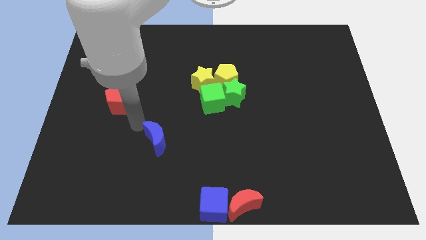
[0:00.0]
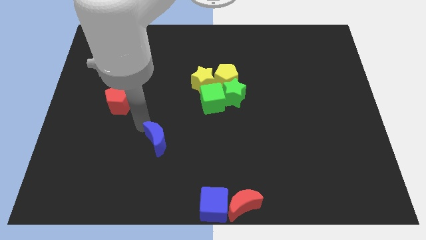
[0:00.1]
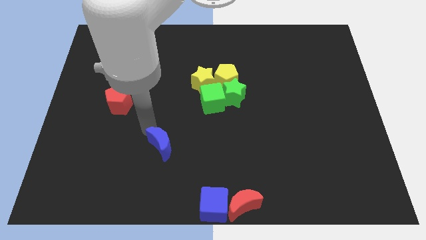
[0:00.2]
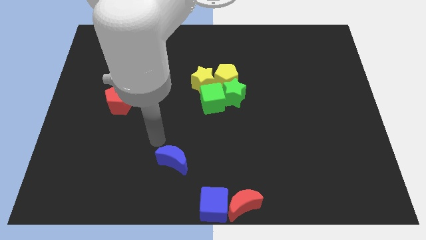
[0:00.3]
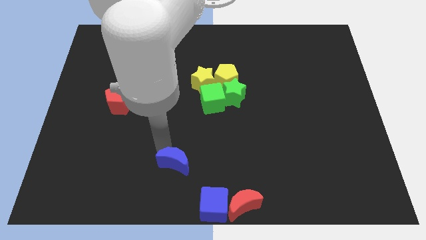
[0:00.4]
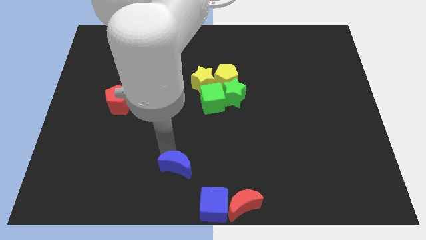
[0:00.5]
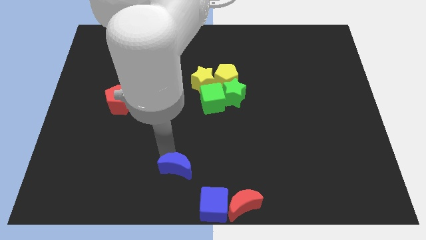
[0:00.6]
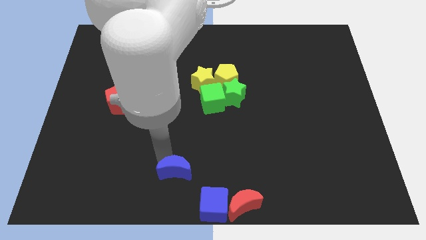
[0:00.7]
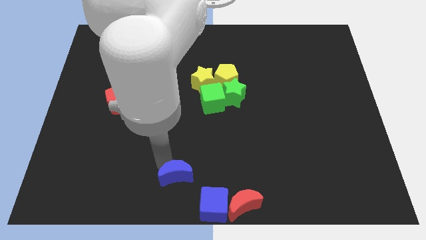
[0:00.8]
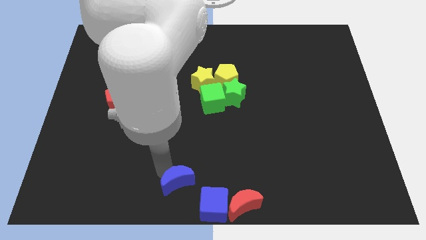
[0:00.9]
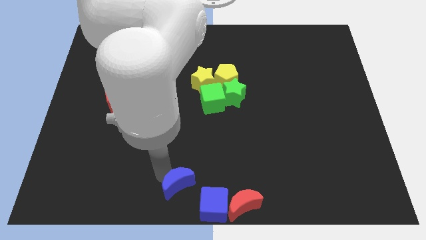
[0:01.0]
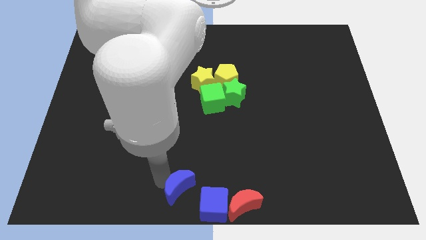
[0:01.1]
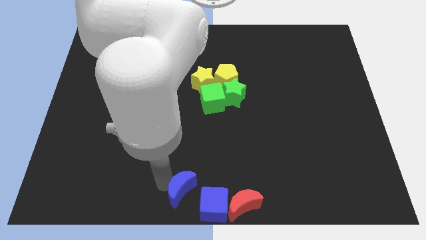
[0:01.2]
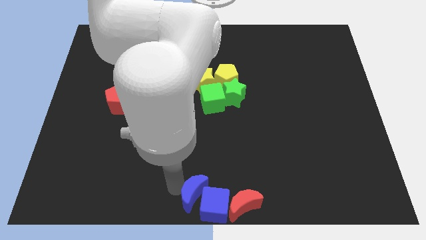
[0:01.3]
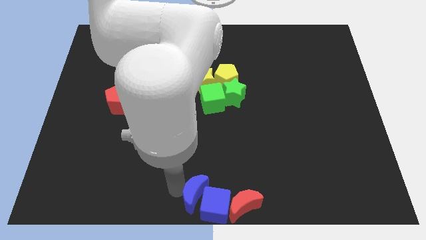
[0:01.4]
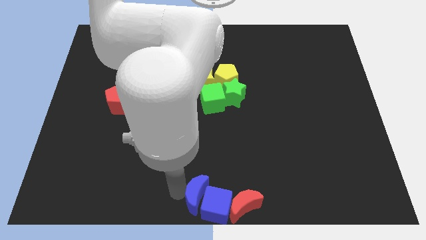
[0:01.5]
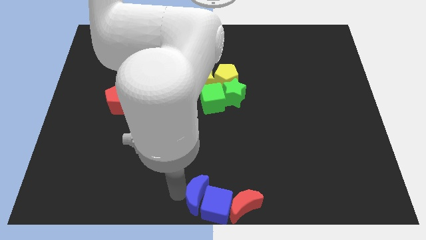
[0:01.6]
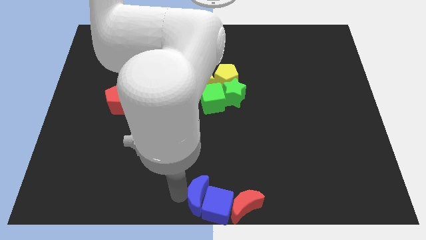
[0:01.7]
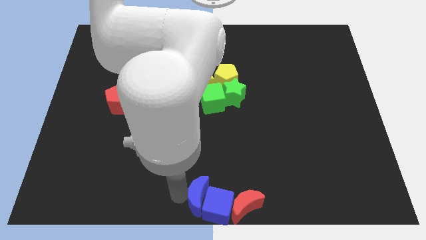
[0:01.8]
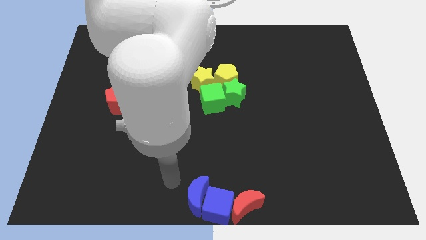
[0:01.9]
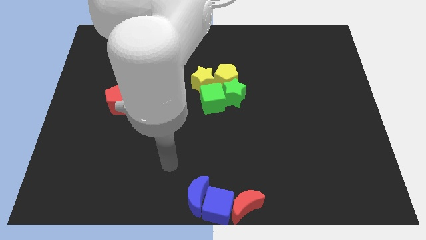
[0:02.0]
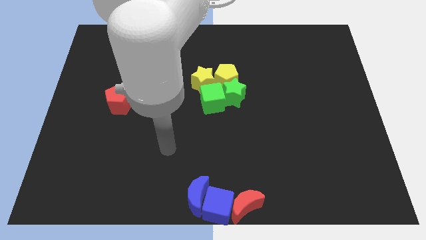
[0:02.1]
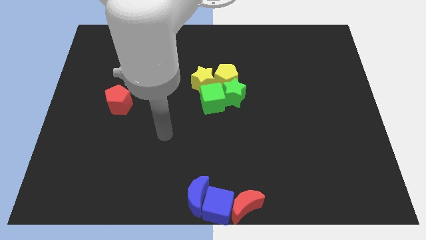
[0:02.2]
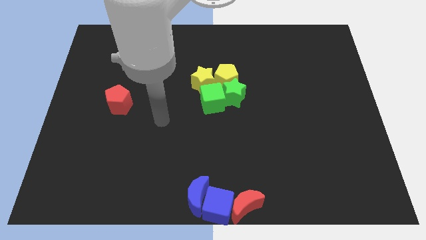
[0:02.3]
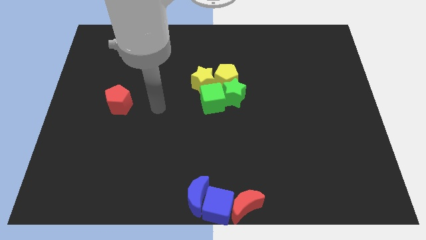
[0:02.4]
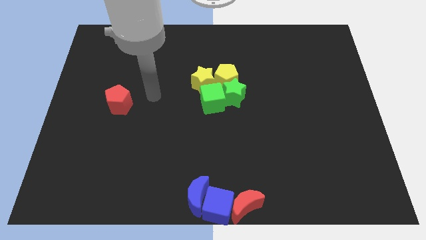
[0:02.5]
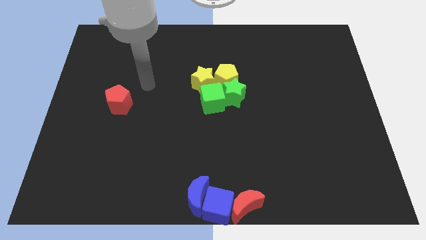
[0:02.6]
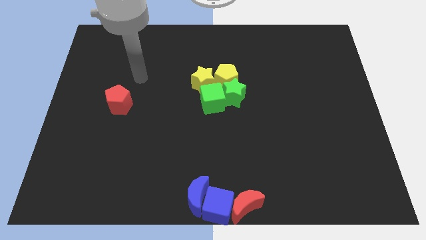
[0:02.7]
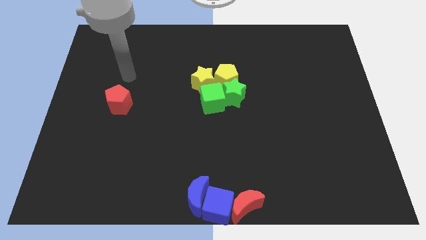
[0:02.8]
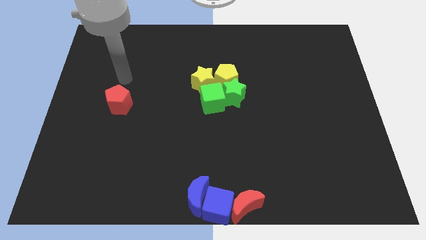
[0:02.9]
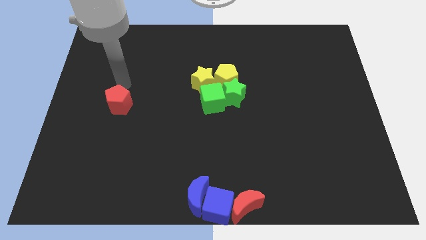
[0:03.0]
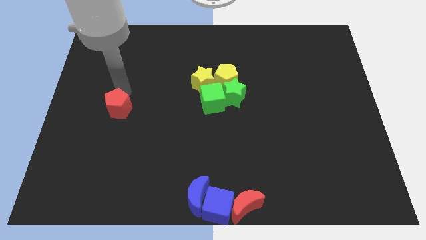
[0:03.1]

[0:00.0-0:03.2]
push the blue crescent into the blue cube

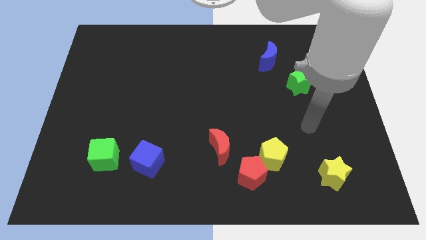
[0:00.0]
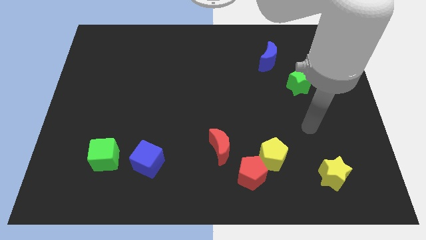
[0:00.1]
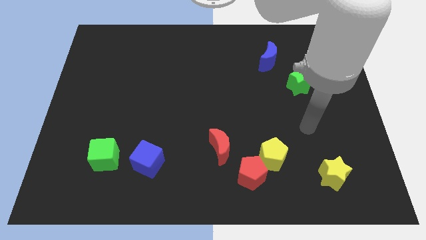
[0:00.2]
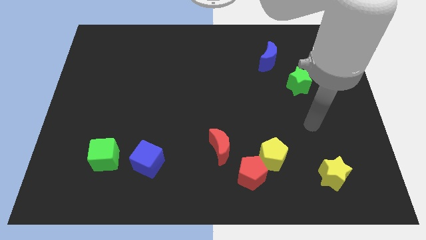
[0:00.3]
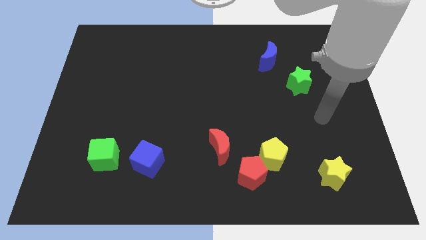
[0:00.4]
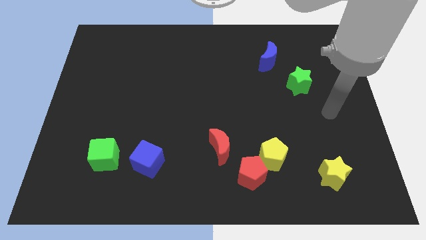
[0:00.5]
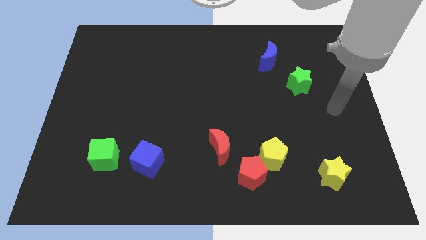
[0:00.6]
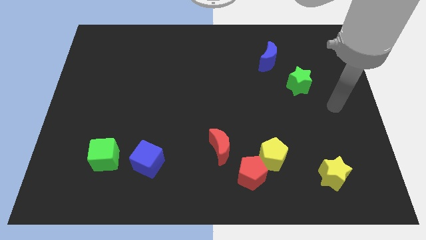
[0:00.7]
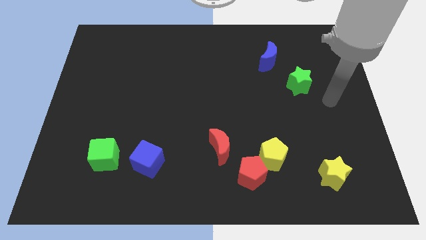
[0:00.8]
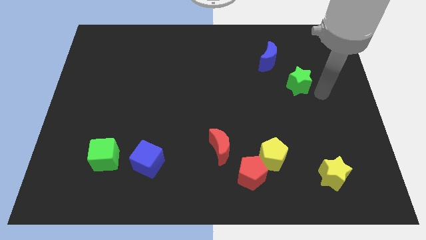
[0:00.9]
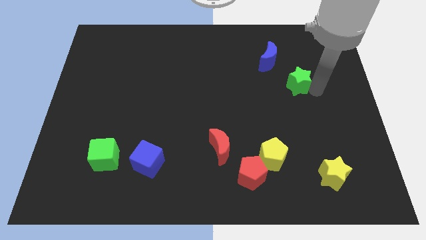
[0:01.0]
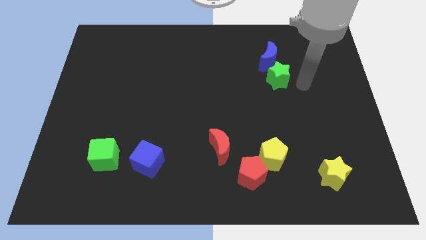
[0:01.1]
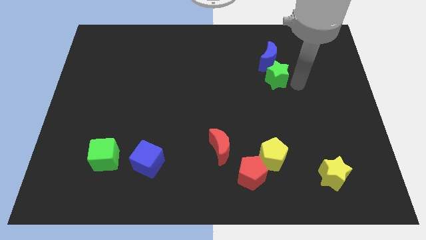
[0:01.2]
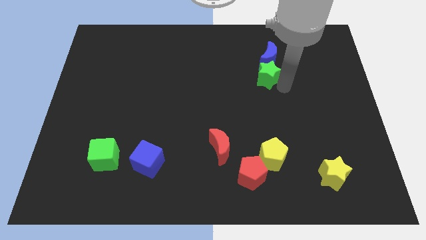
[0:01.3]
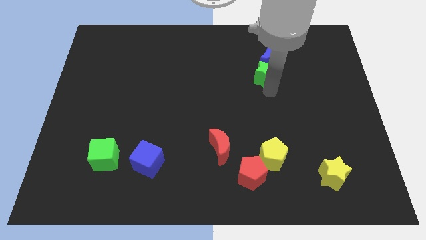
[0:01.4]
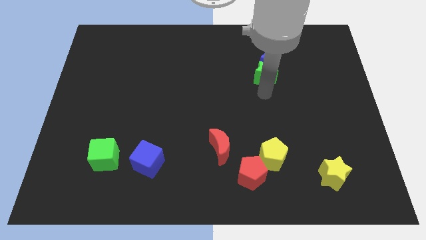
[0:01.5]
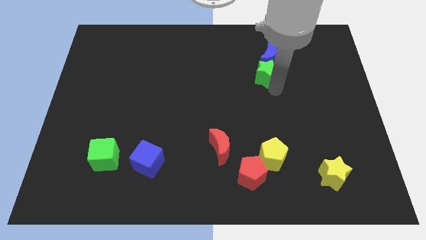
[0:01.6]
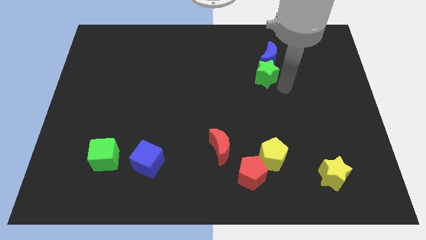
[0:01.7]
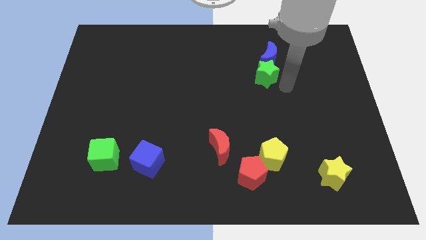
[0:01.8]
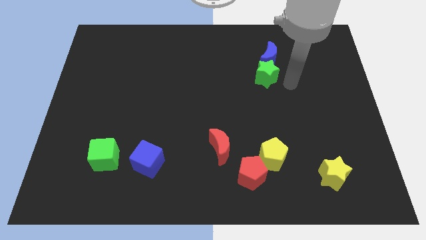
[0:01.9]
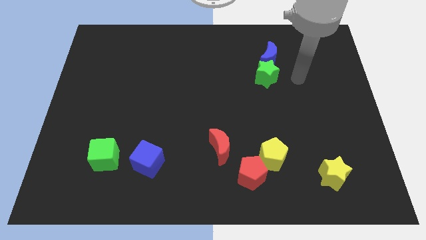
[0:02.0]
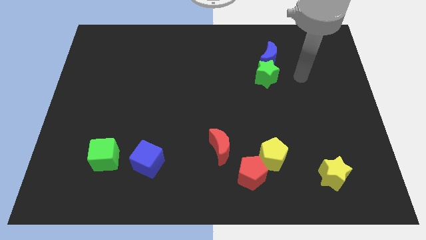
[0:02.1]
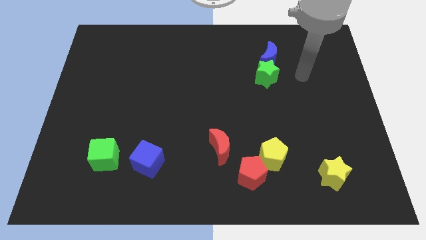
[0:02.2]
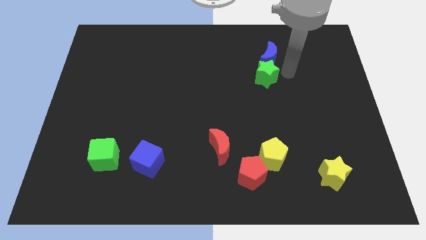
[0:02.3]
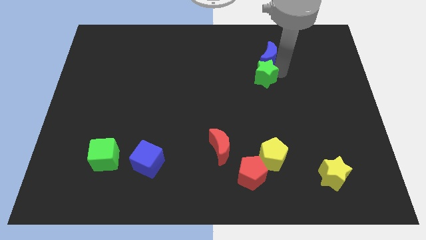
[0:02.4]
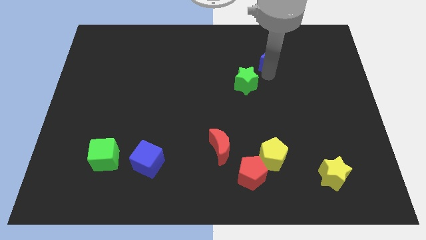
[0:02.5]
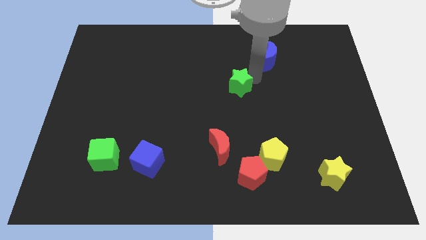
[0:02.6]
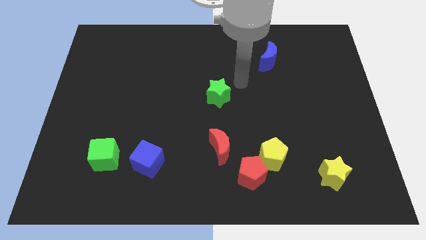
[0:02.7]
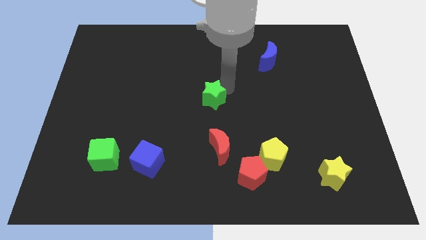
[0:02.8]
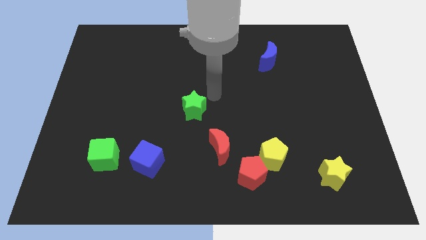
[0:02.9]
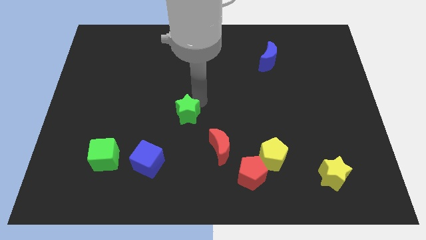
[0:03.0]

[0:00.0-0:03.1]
move the green star at the top left of the red crescent

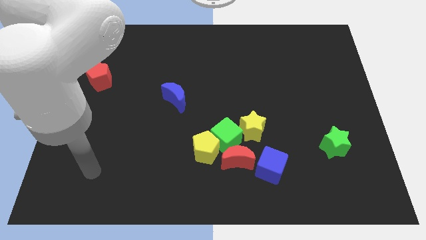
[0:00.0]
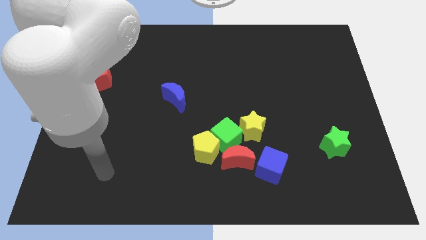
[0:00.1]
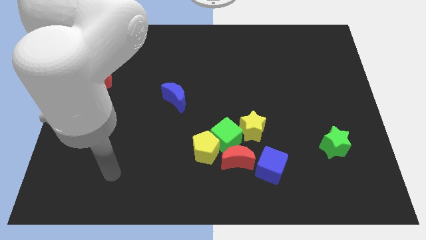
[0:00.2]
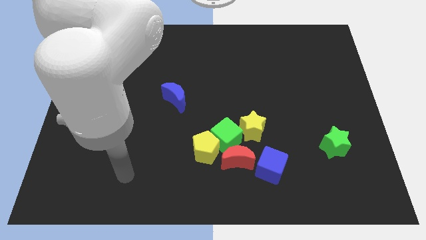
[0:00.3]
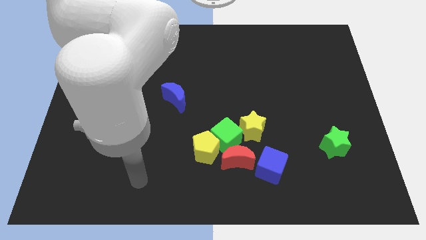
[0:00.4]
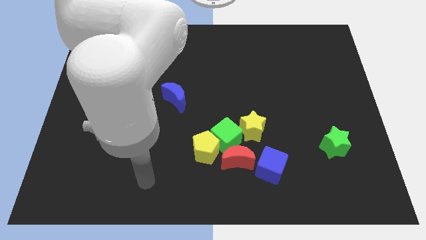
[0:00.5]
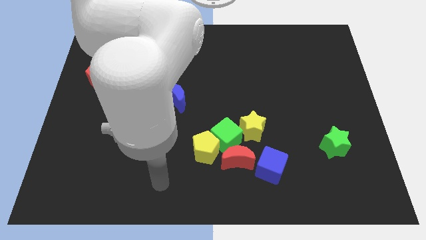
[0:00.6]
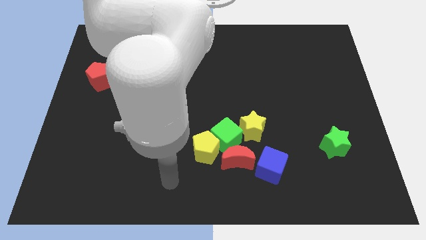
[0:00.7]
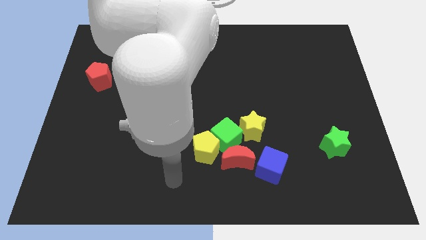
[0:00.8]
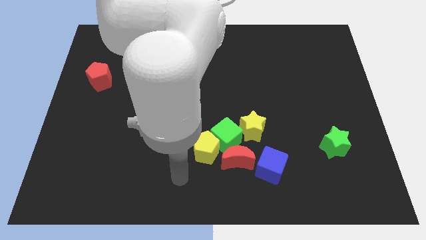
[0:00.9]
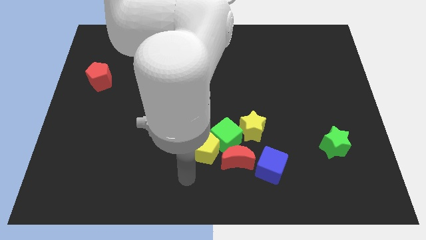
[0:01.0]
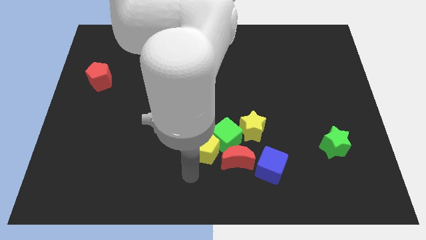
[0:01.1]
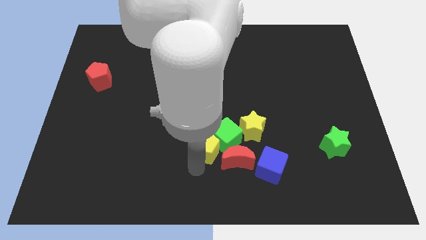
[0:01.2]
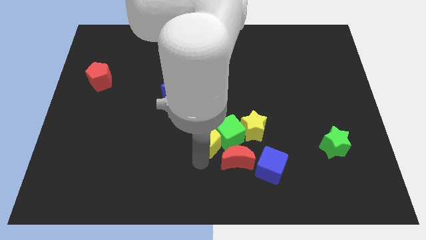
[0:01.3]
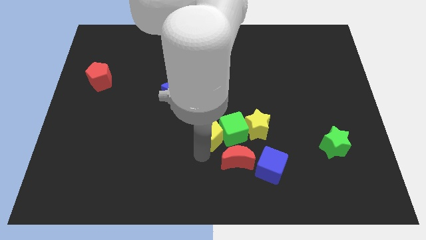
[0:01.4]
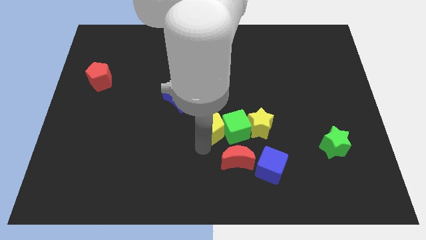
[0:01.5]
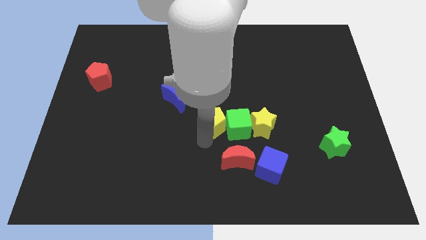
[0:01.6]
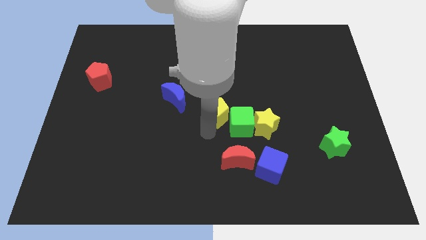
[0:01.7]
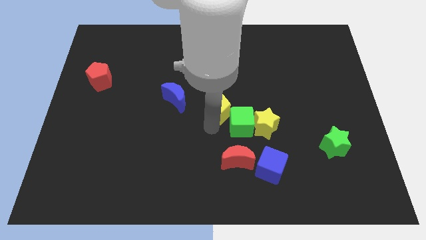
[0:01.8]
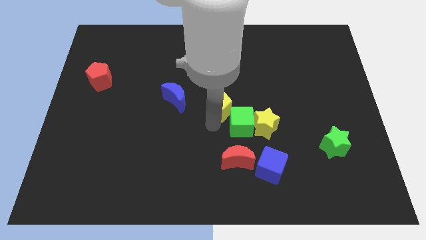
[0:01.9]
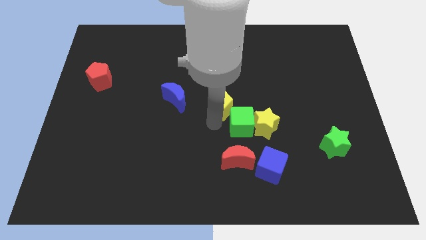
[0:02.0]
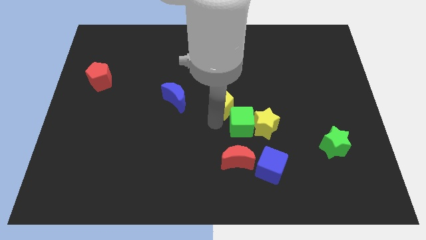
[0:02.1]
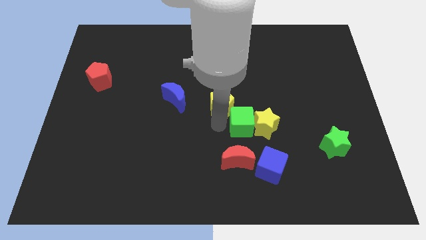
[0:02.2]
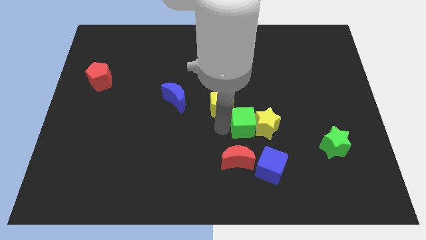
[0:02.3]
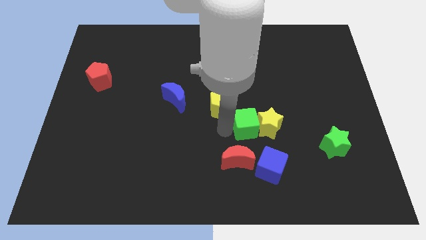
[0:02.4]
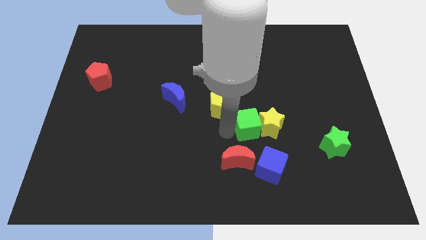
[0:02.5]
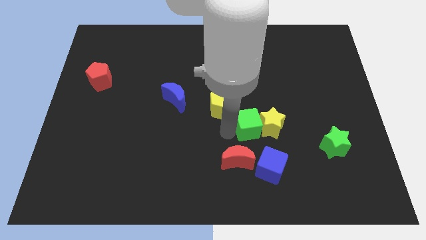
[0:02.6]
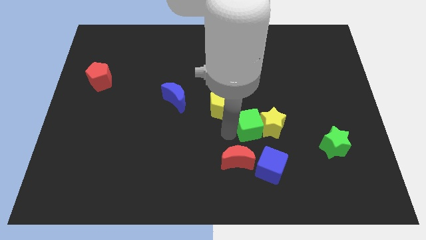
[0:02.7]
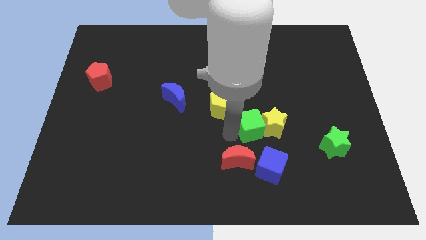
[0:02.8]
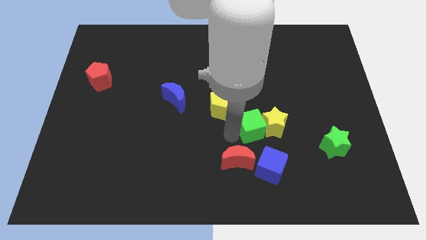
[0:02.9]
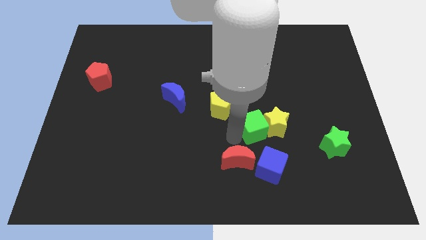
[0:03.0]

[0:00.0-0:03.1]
seperate the yellow pentagon and green cube
